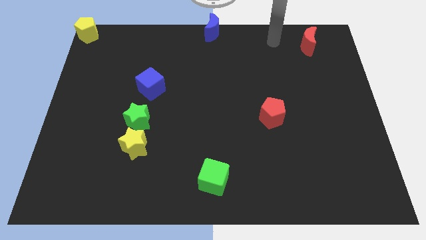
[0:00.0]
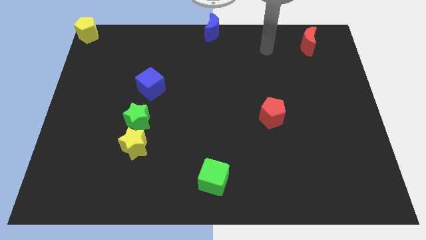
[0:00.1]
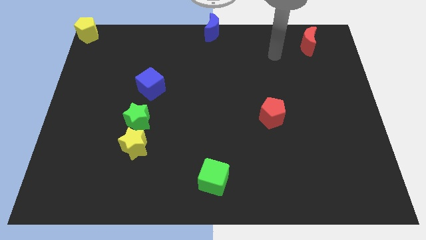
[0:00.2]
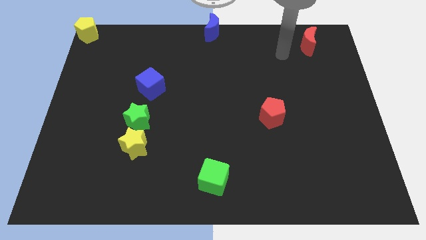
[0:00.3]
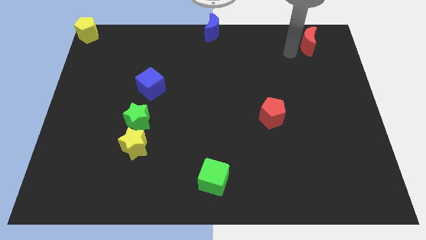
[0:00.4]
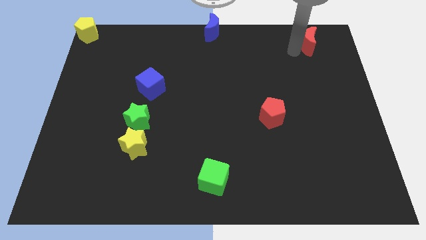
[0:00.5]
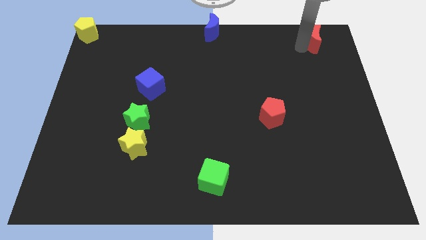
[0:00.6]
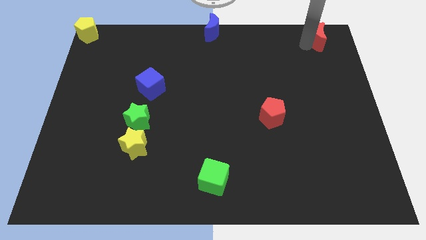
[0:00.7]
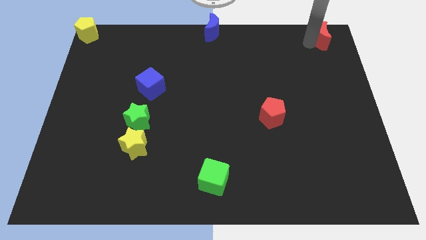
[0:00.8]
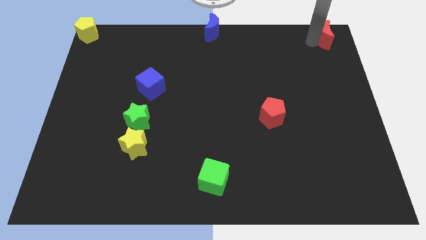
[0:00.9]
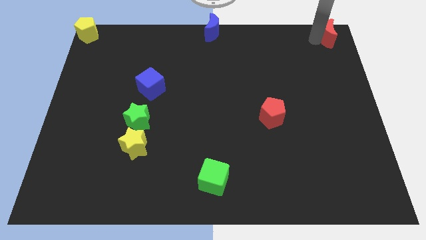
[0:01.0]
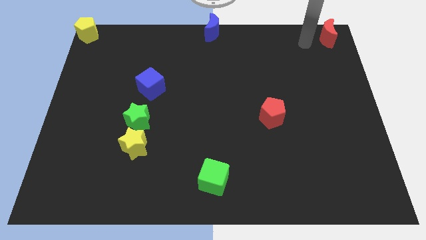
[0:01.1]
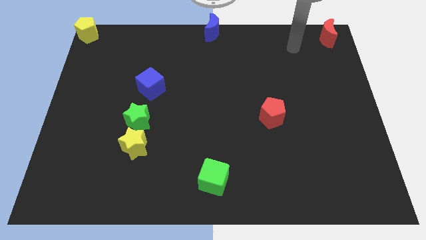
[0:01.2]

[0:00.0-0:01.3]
place red crescent towards top right corner

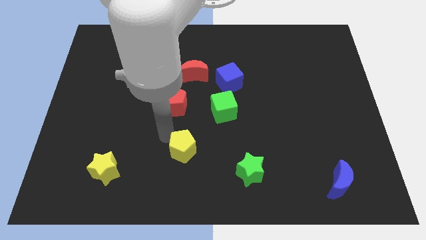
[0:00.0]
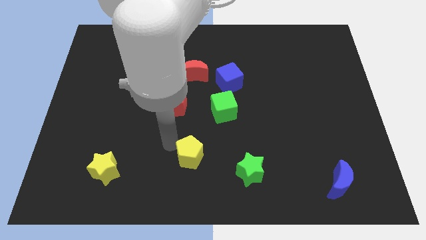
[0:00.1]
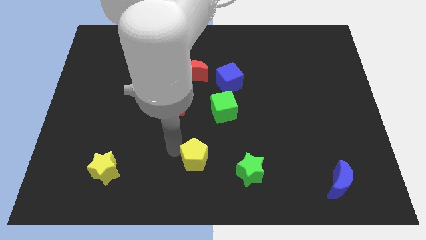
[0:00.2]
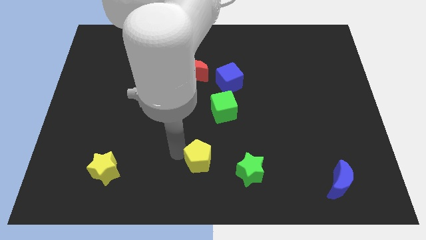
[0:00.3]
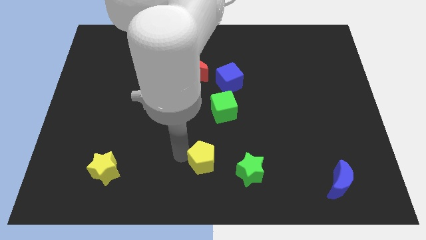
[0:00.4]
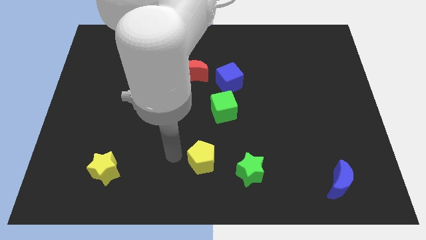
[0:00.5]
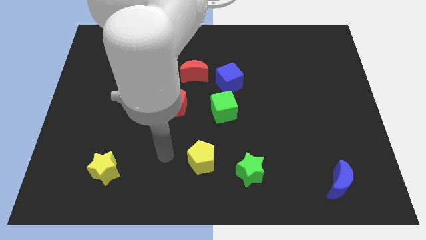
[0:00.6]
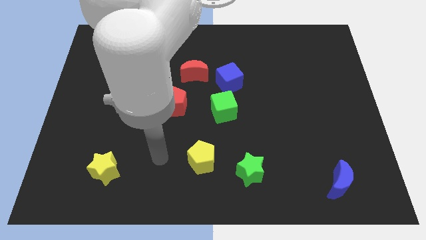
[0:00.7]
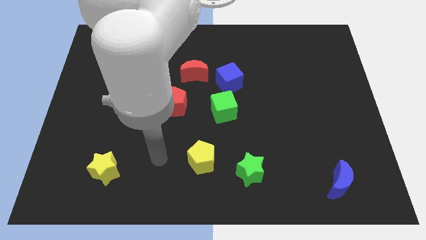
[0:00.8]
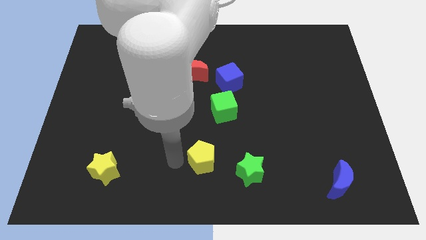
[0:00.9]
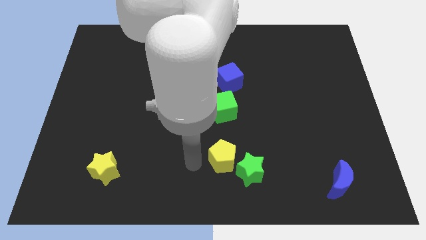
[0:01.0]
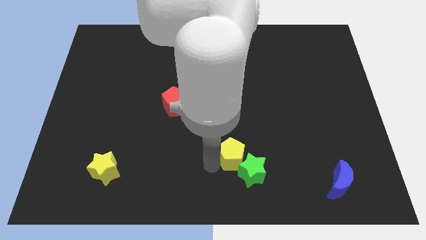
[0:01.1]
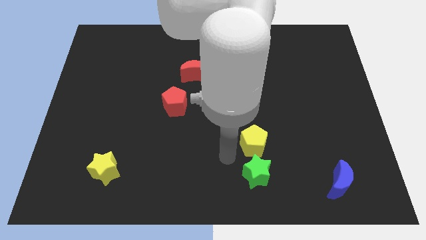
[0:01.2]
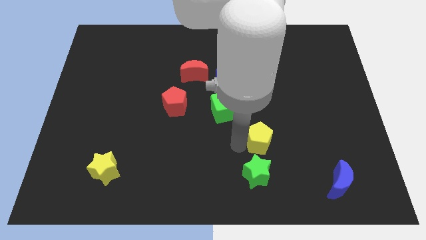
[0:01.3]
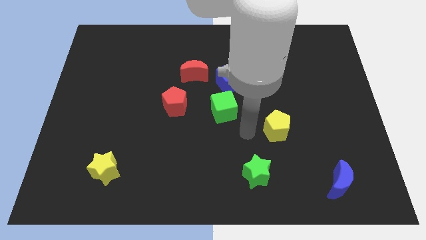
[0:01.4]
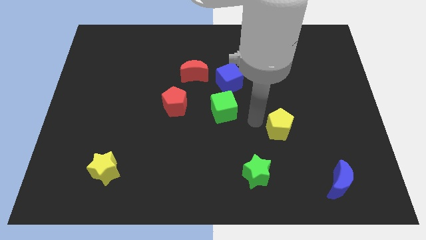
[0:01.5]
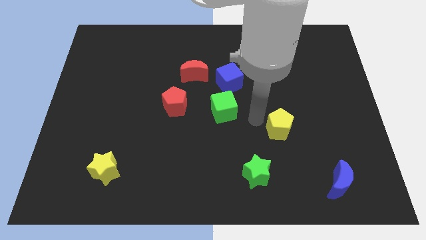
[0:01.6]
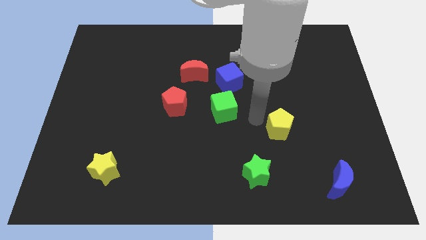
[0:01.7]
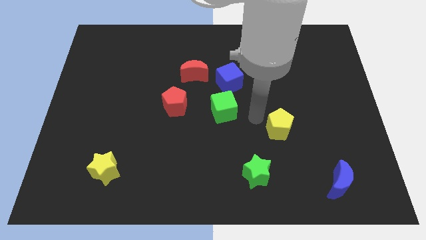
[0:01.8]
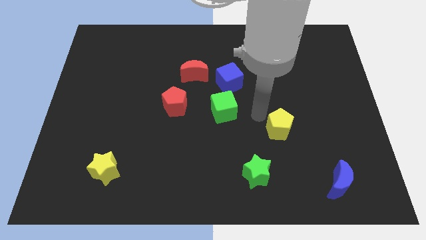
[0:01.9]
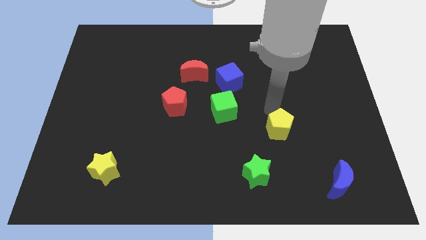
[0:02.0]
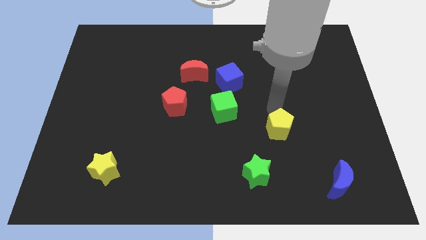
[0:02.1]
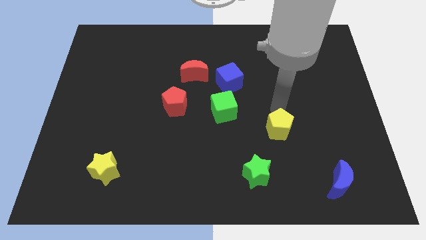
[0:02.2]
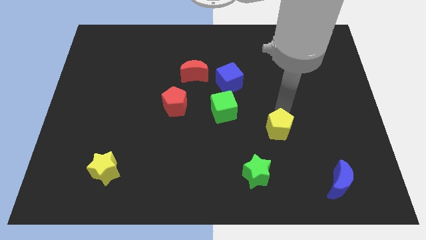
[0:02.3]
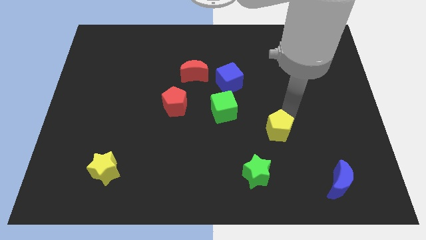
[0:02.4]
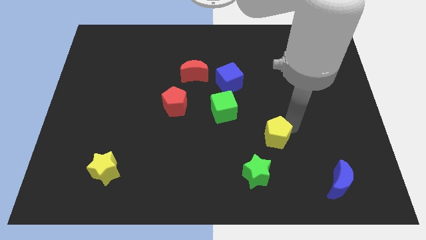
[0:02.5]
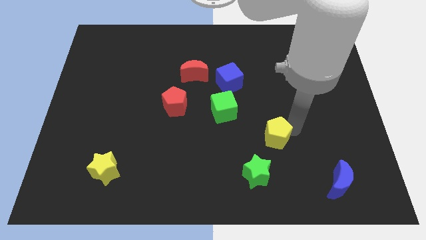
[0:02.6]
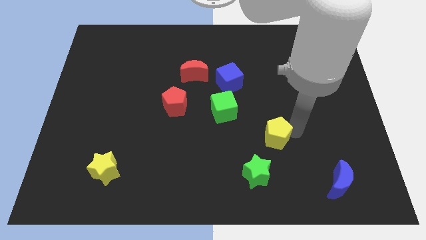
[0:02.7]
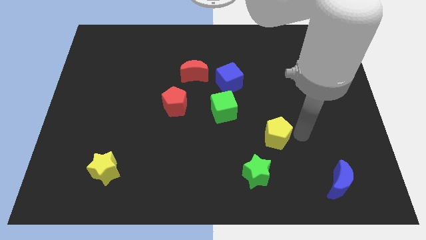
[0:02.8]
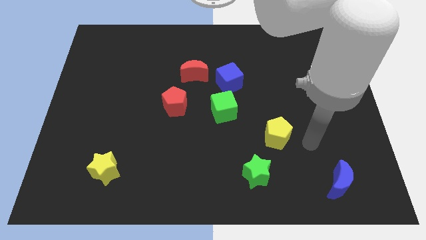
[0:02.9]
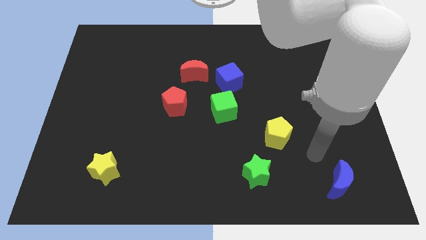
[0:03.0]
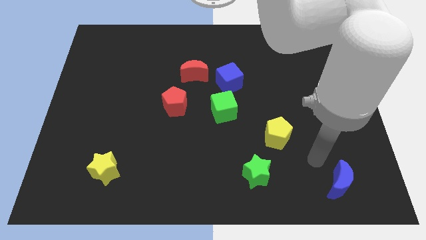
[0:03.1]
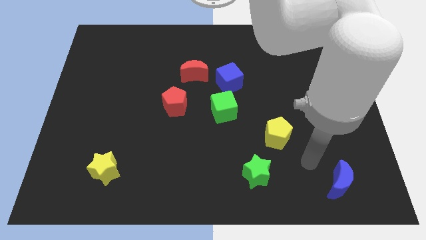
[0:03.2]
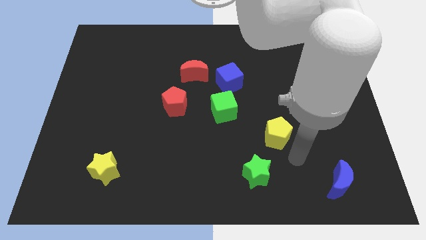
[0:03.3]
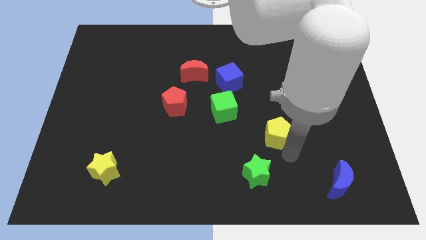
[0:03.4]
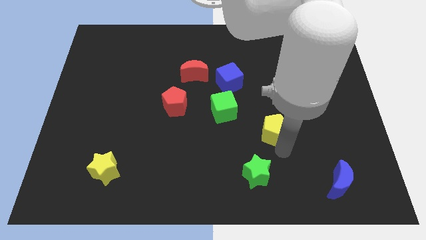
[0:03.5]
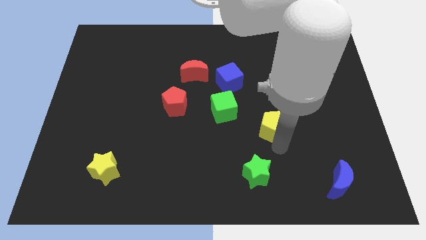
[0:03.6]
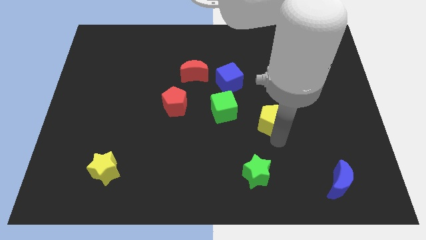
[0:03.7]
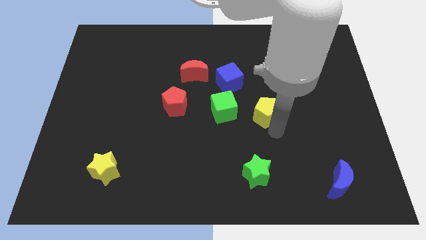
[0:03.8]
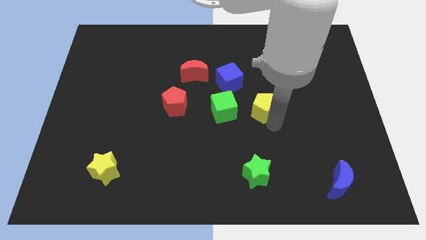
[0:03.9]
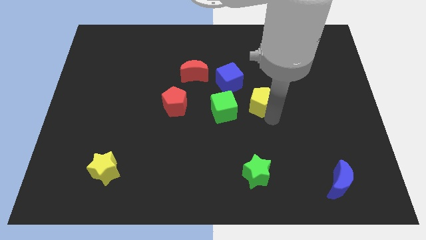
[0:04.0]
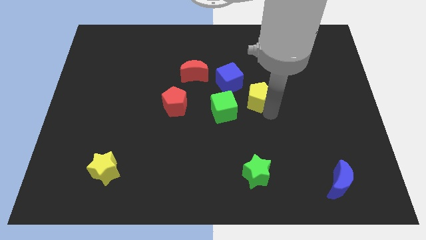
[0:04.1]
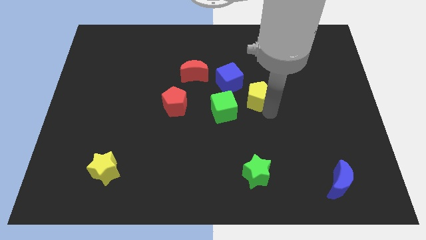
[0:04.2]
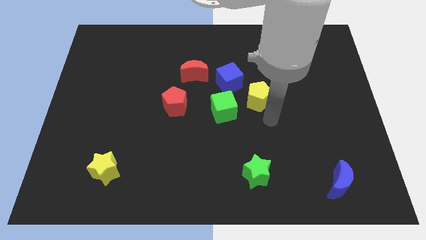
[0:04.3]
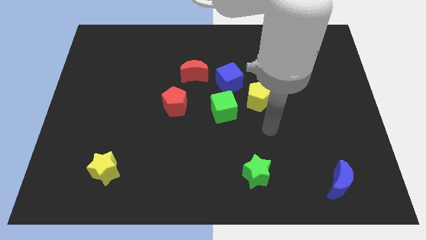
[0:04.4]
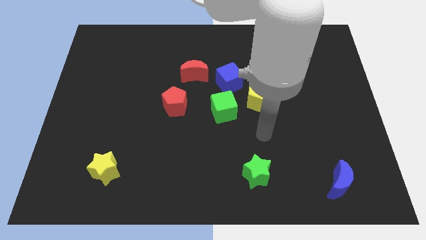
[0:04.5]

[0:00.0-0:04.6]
put the yellow pentagon on the right side of the green cube

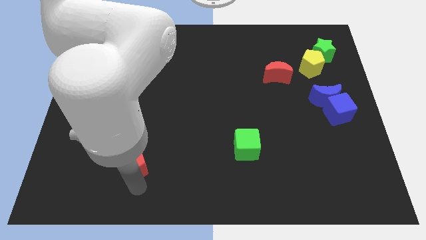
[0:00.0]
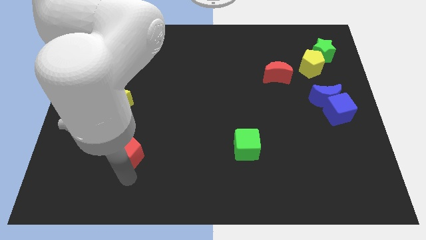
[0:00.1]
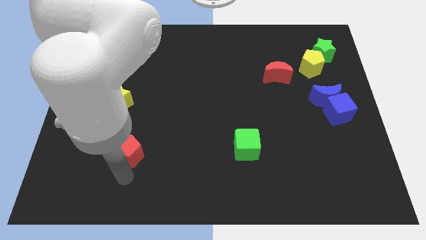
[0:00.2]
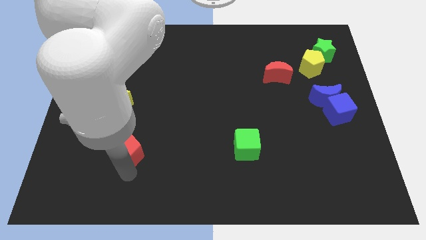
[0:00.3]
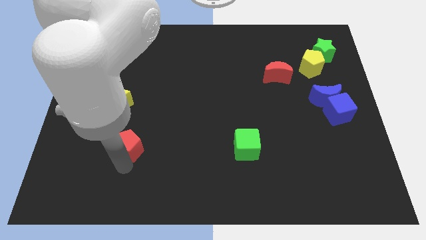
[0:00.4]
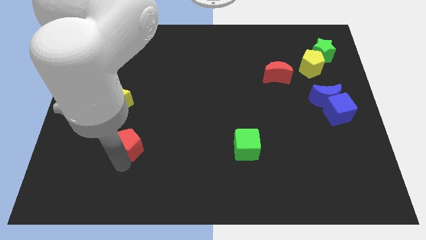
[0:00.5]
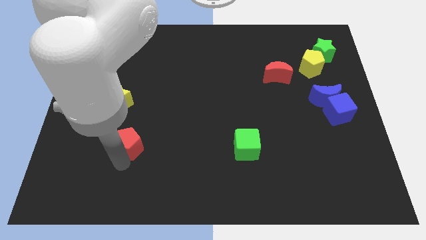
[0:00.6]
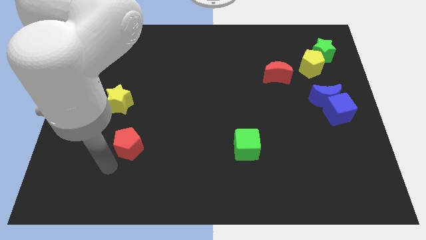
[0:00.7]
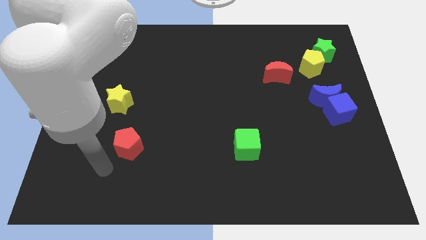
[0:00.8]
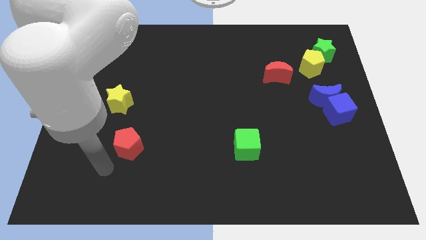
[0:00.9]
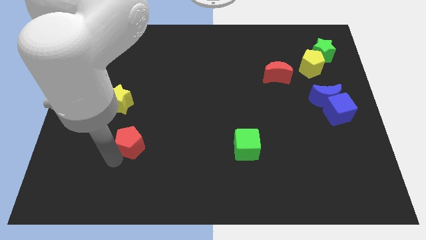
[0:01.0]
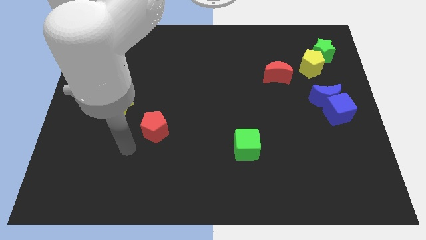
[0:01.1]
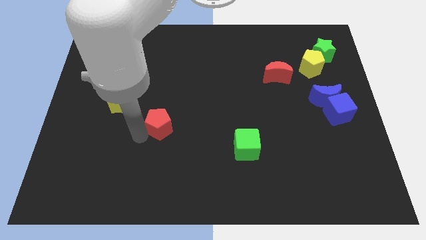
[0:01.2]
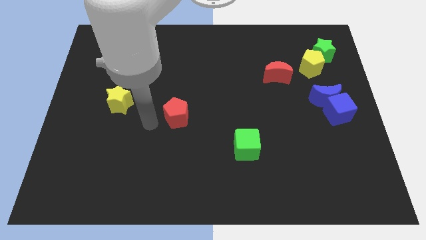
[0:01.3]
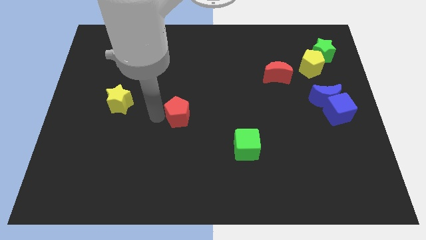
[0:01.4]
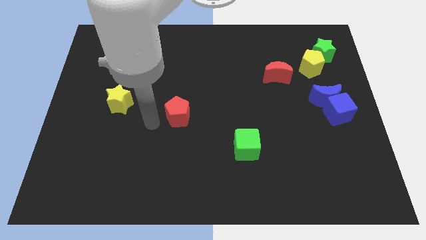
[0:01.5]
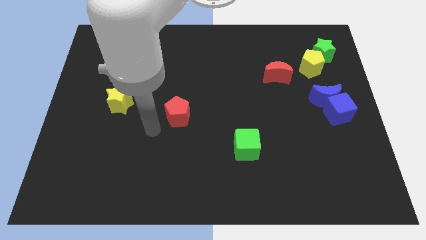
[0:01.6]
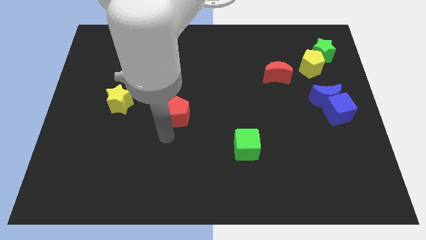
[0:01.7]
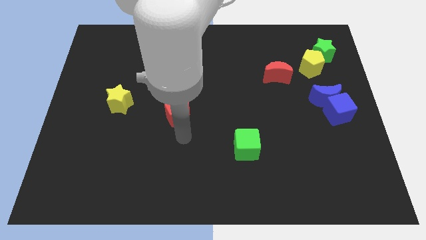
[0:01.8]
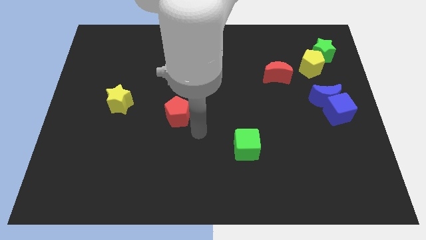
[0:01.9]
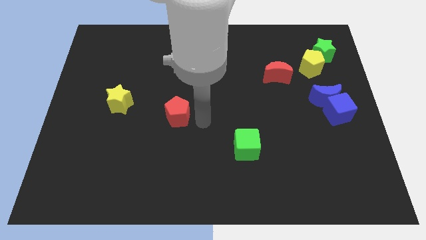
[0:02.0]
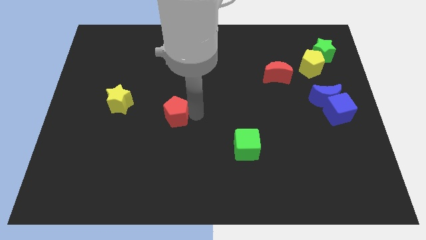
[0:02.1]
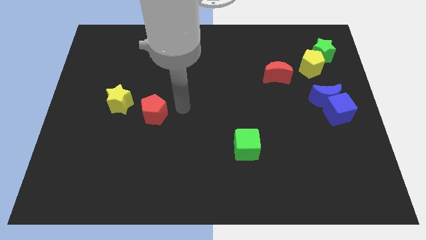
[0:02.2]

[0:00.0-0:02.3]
push red pentagon upwards of the board

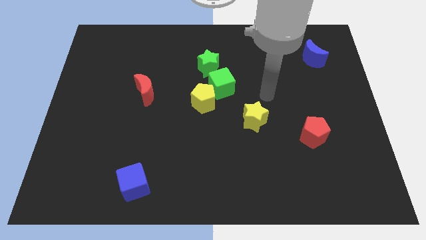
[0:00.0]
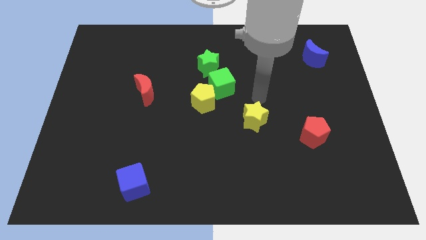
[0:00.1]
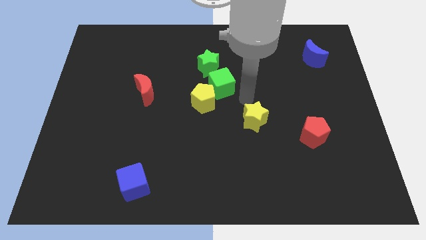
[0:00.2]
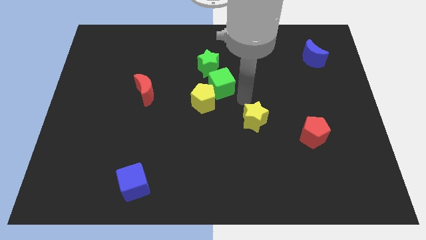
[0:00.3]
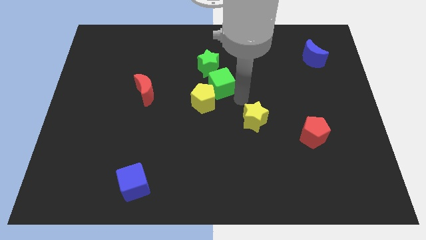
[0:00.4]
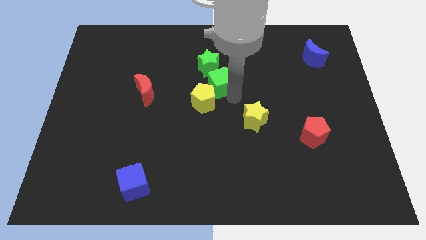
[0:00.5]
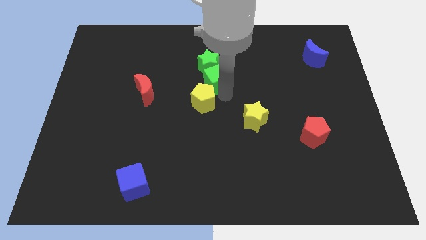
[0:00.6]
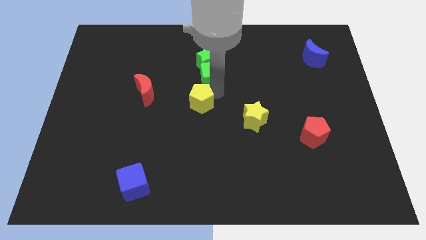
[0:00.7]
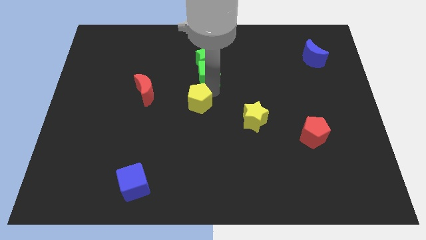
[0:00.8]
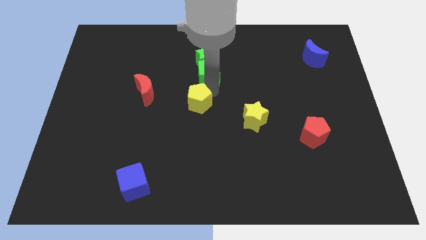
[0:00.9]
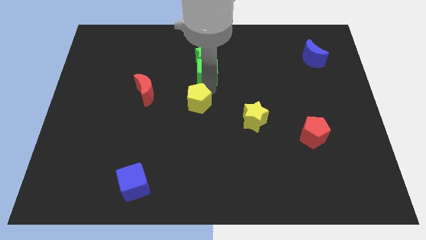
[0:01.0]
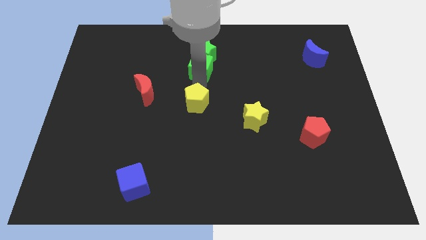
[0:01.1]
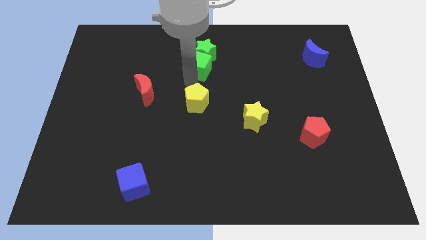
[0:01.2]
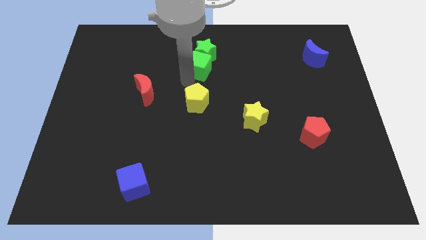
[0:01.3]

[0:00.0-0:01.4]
push the green cube into the green star
